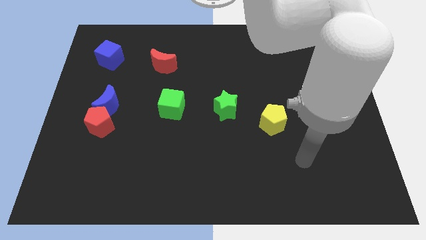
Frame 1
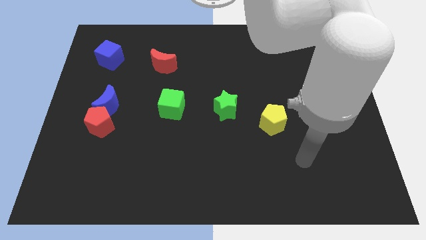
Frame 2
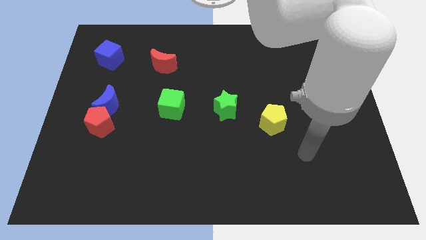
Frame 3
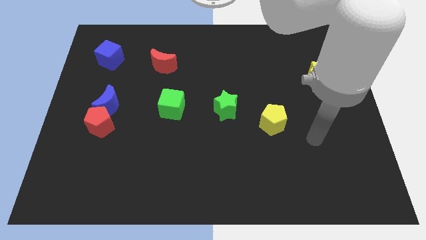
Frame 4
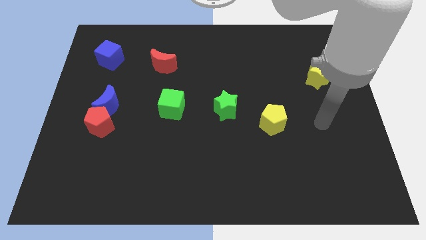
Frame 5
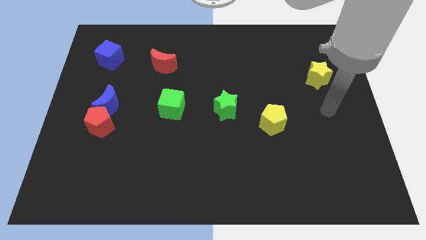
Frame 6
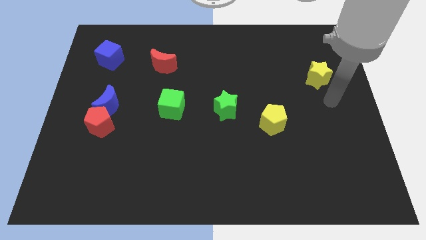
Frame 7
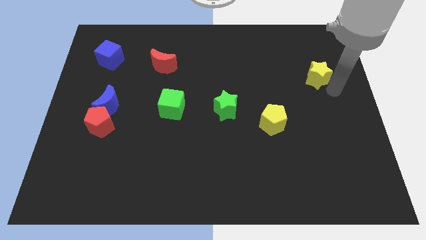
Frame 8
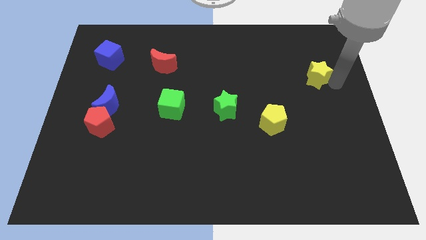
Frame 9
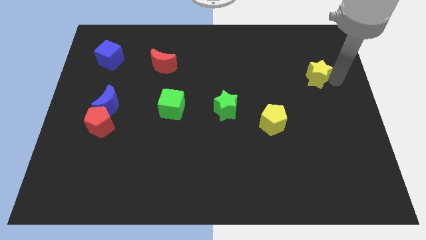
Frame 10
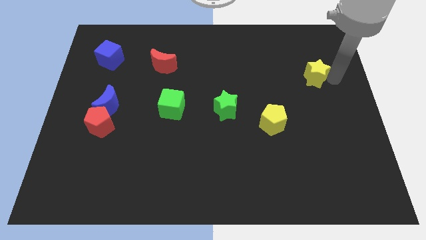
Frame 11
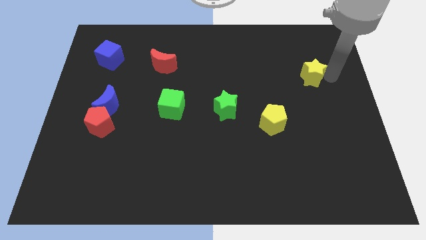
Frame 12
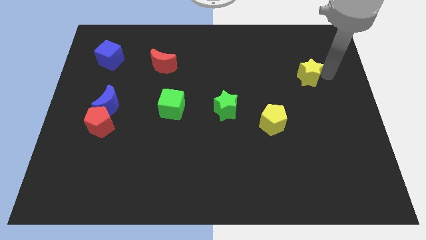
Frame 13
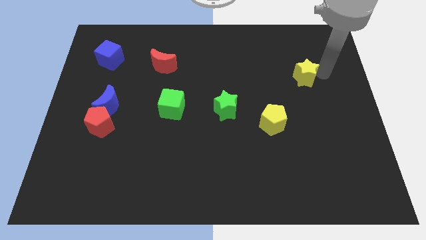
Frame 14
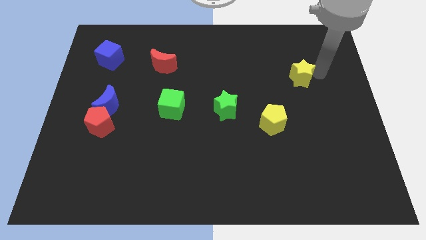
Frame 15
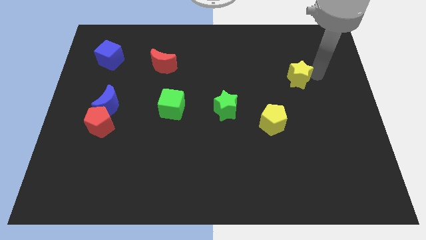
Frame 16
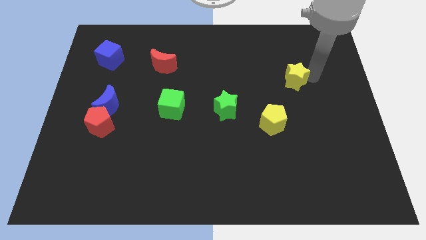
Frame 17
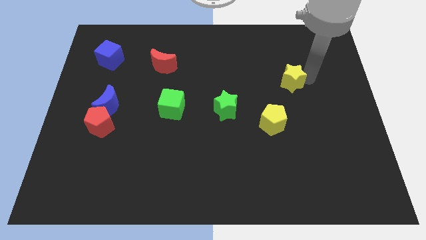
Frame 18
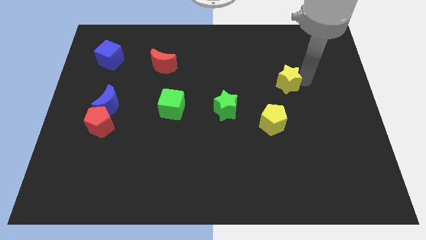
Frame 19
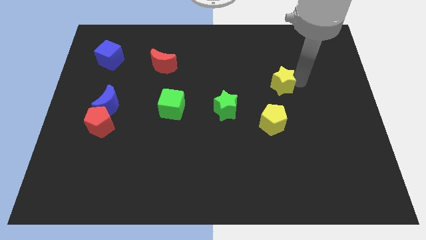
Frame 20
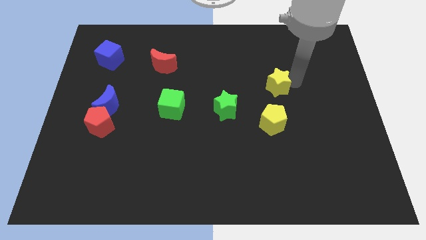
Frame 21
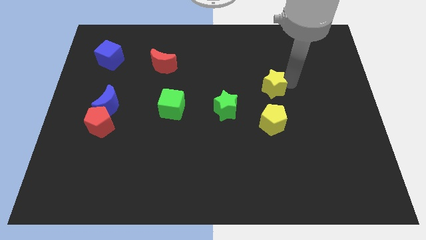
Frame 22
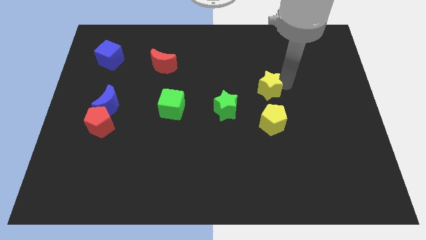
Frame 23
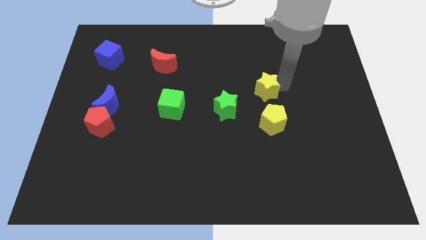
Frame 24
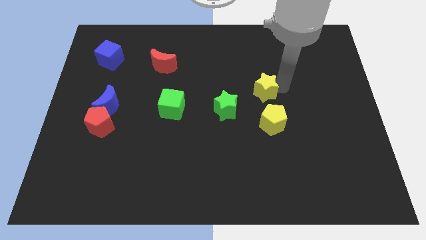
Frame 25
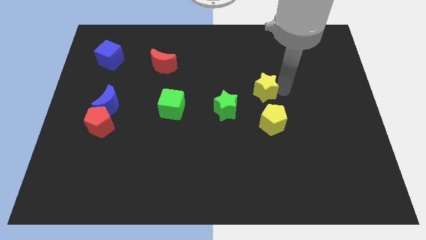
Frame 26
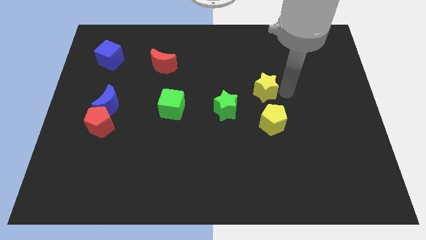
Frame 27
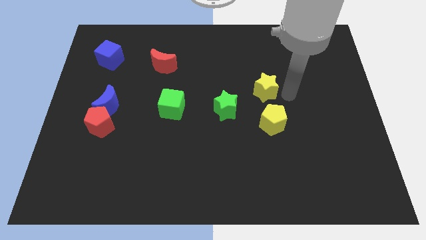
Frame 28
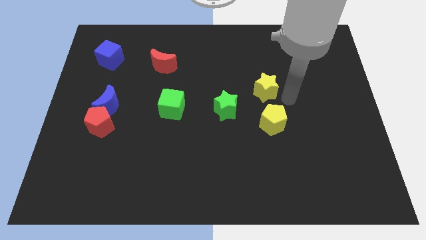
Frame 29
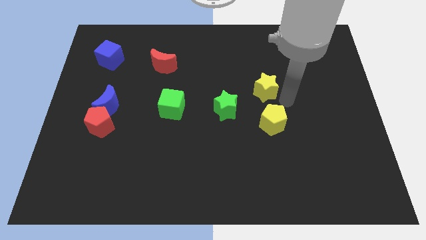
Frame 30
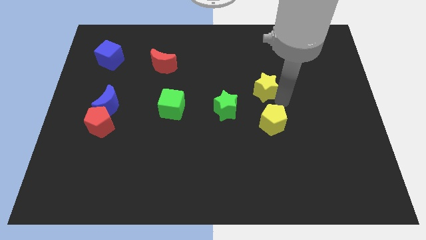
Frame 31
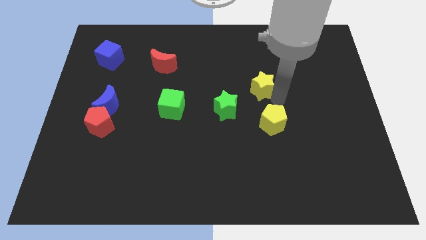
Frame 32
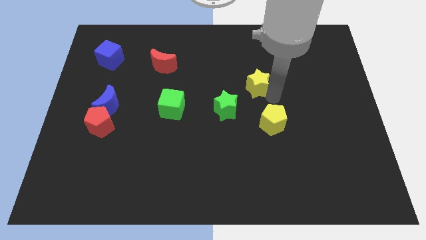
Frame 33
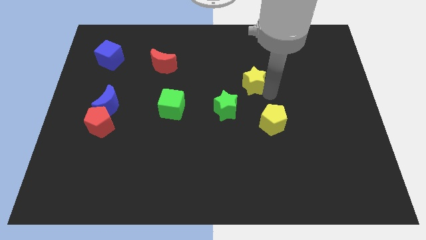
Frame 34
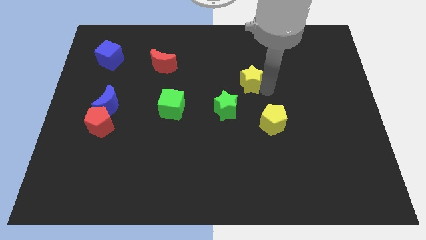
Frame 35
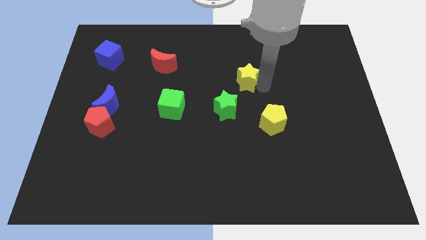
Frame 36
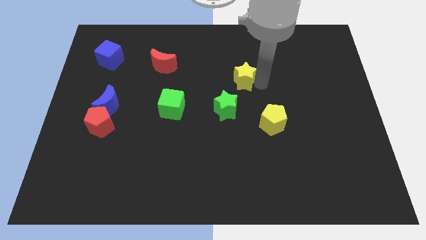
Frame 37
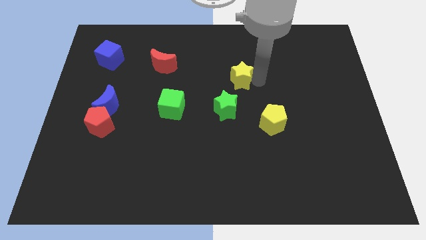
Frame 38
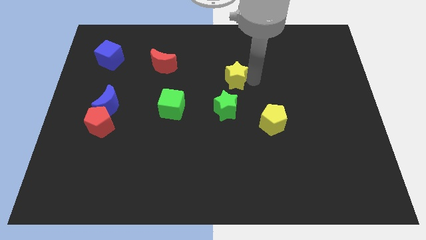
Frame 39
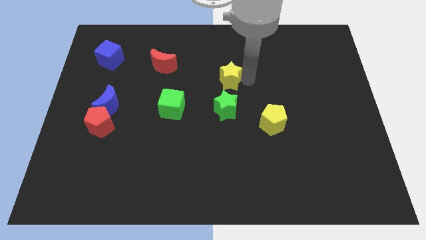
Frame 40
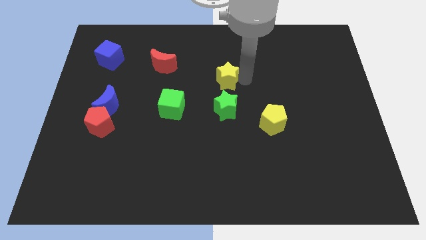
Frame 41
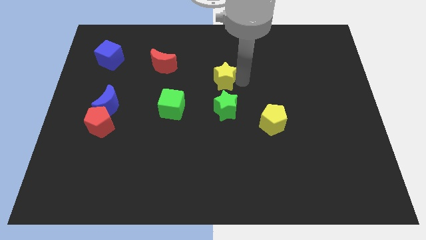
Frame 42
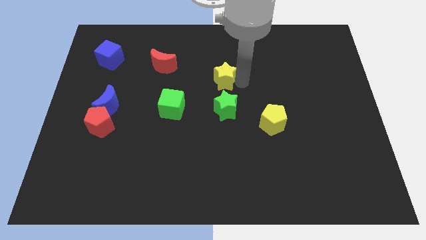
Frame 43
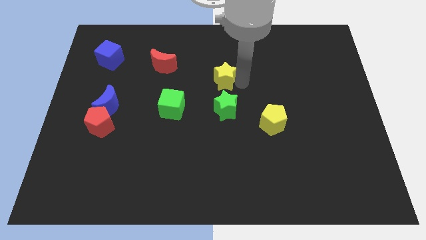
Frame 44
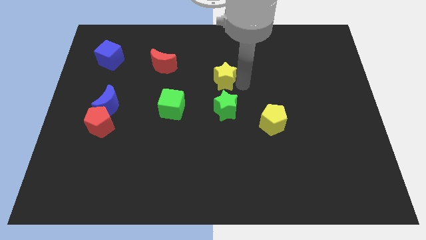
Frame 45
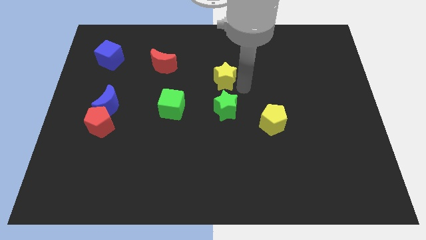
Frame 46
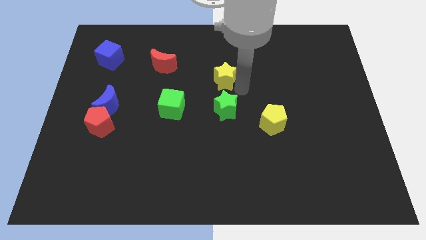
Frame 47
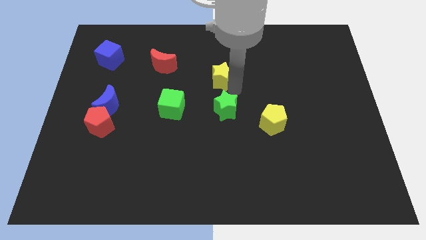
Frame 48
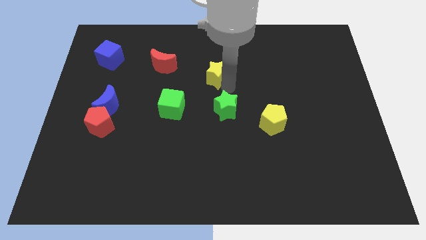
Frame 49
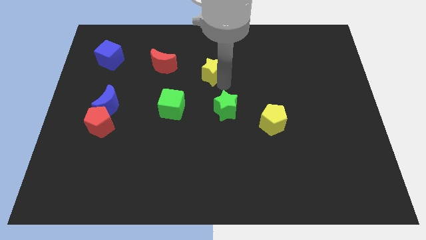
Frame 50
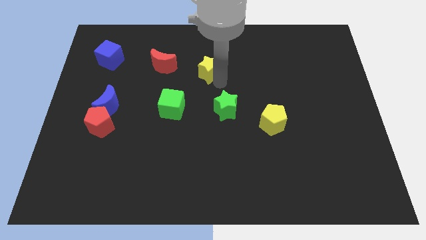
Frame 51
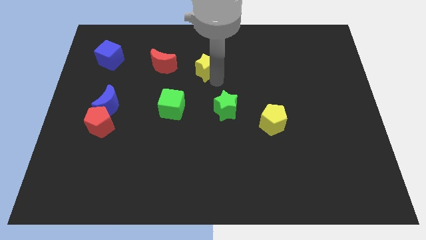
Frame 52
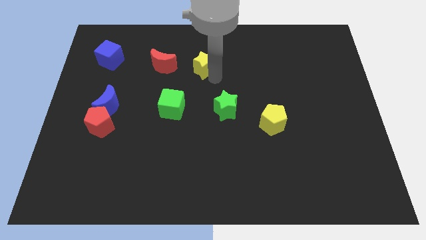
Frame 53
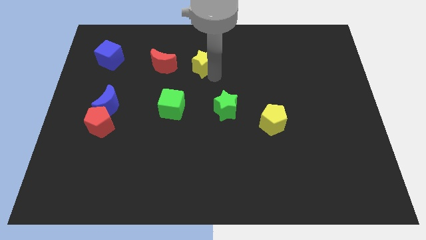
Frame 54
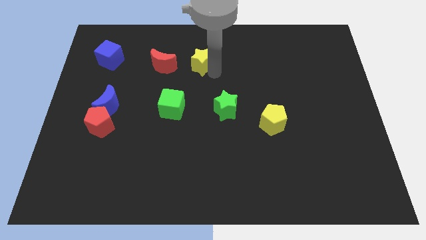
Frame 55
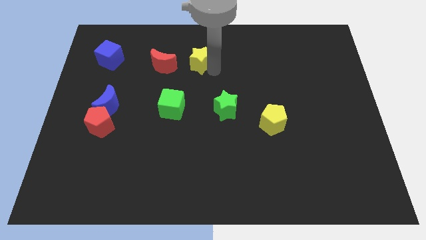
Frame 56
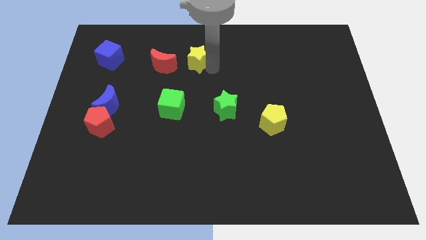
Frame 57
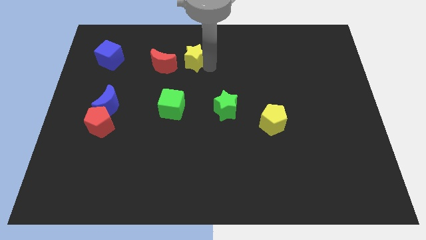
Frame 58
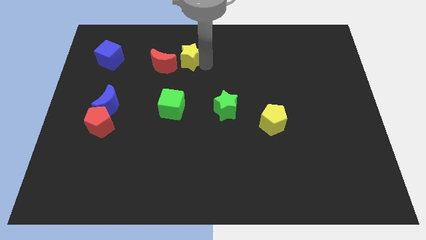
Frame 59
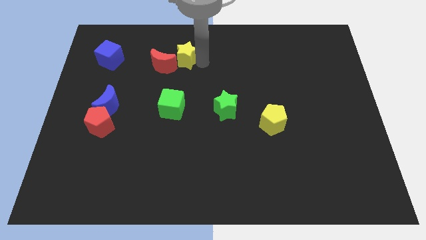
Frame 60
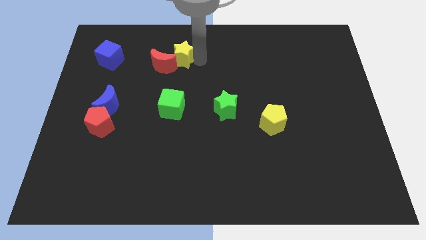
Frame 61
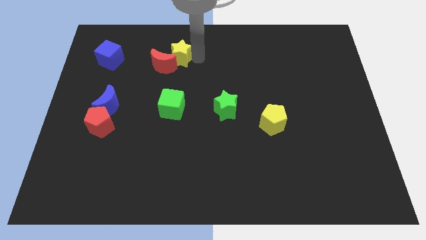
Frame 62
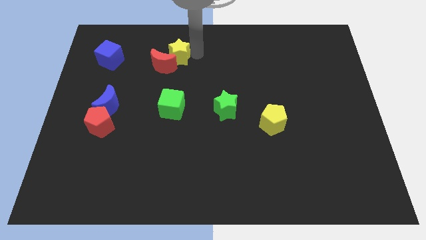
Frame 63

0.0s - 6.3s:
push the yellow star towards the red moon

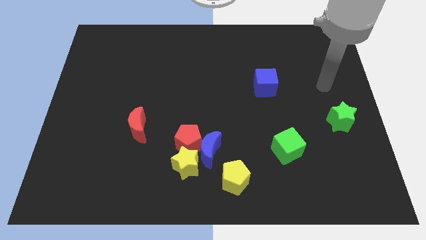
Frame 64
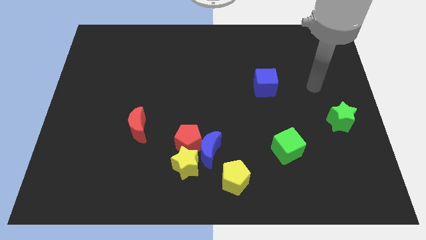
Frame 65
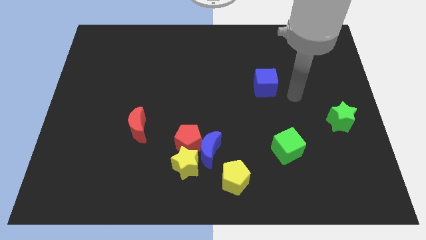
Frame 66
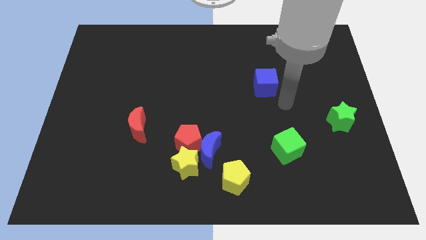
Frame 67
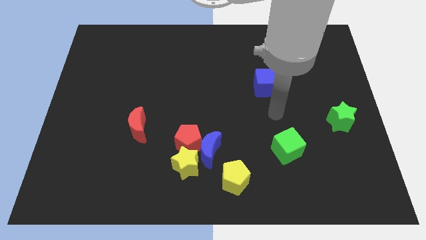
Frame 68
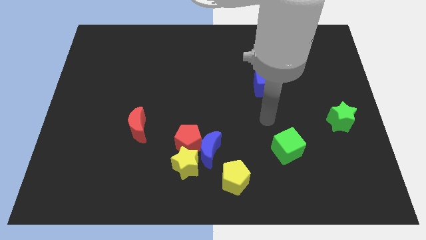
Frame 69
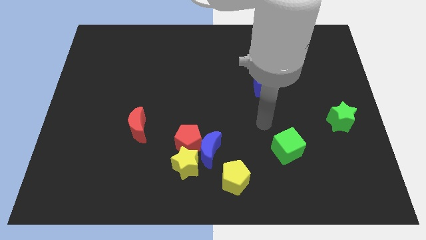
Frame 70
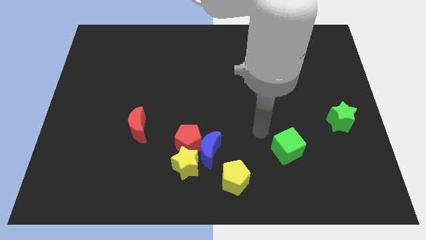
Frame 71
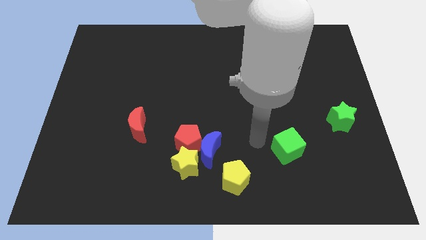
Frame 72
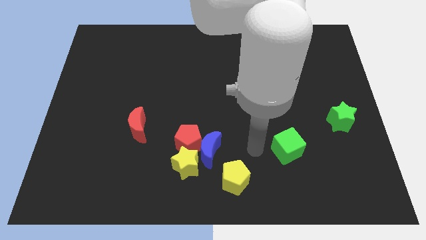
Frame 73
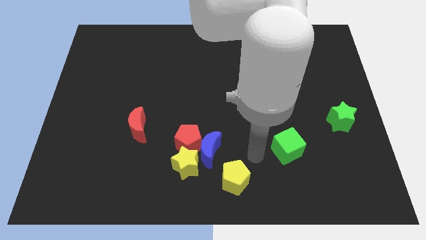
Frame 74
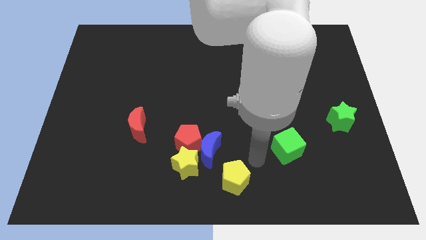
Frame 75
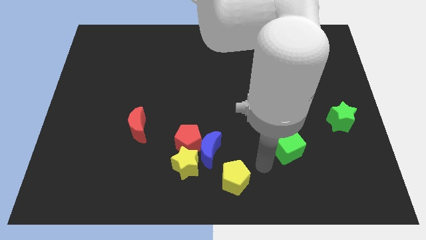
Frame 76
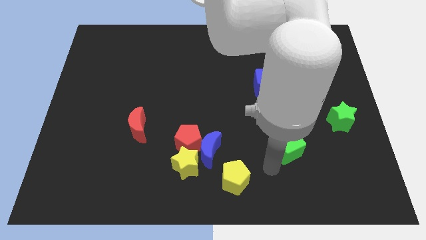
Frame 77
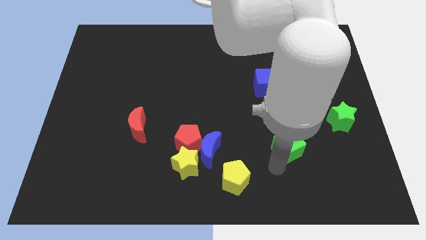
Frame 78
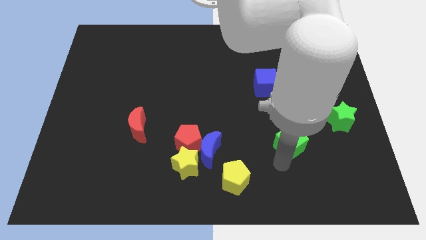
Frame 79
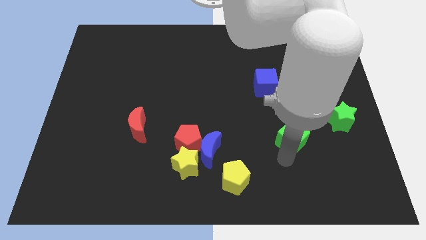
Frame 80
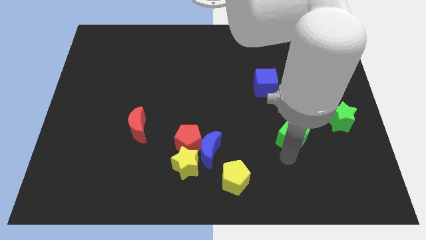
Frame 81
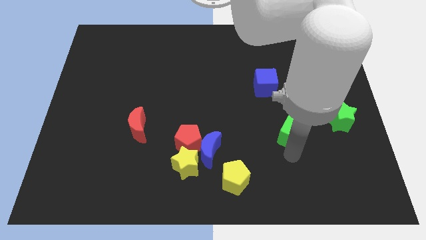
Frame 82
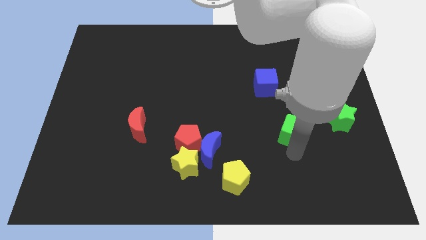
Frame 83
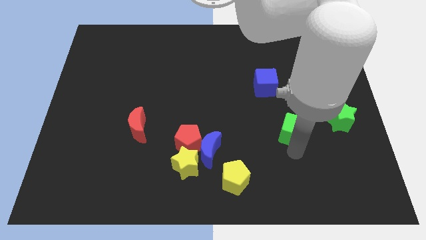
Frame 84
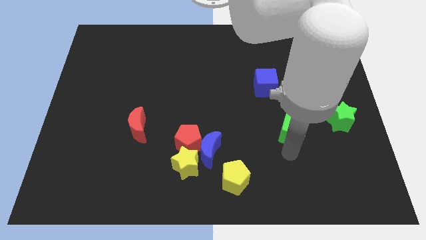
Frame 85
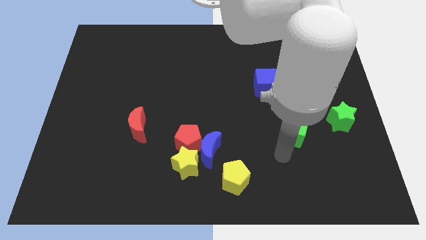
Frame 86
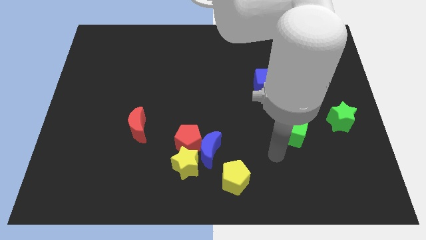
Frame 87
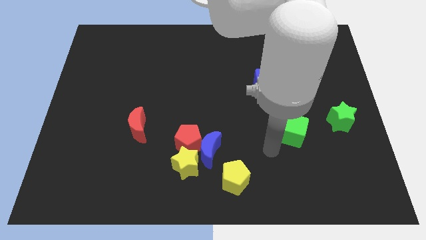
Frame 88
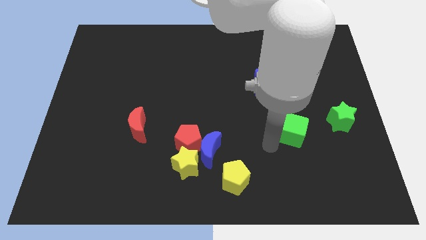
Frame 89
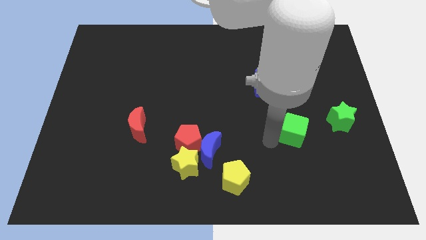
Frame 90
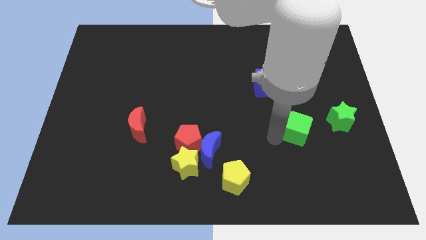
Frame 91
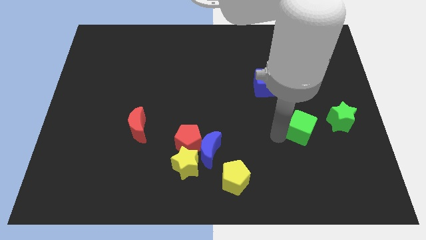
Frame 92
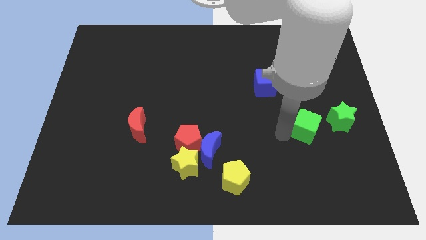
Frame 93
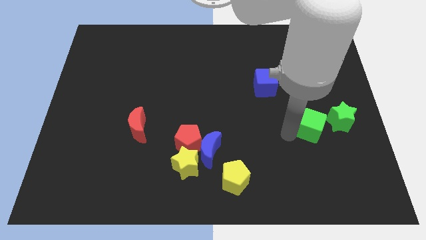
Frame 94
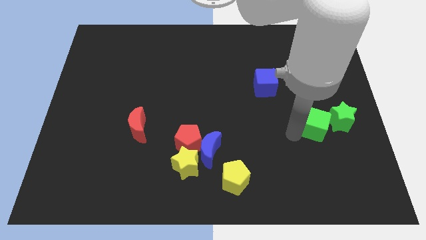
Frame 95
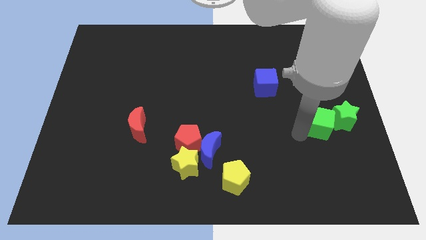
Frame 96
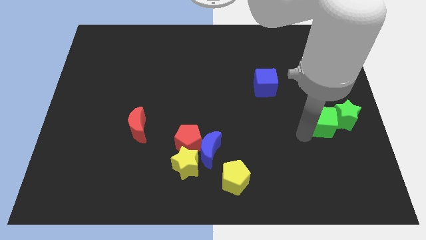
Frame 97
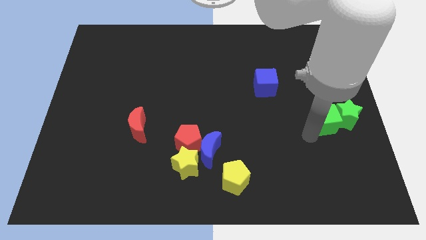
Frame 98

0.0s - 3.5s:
slide the green cube next to the green star
